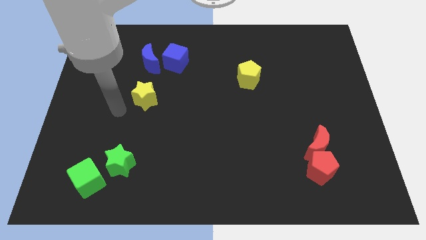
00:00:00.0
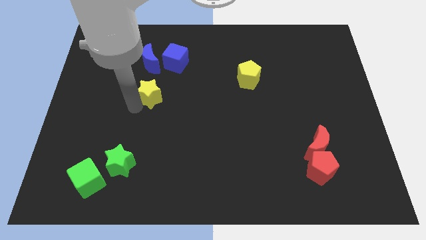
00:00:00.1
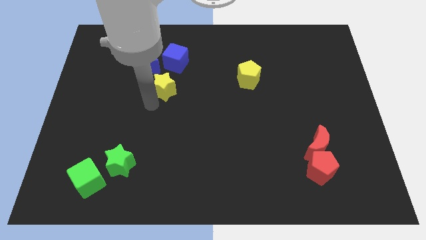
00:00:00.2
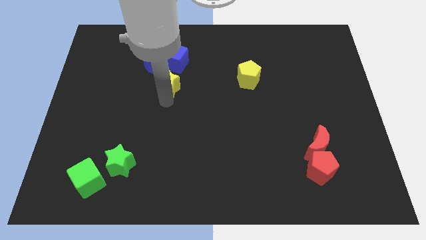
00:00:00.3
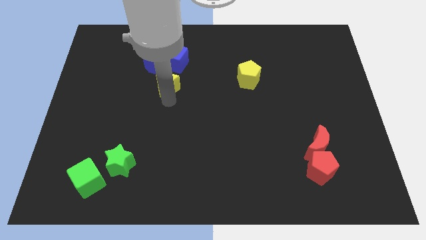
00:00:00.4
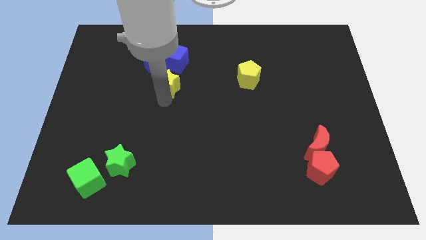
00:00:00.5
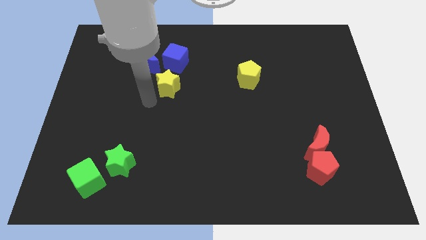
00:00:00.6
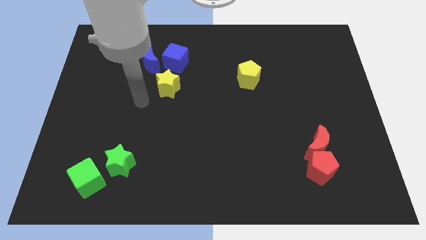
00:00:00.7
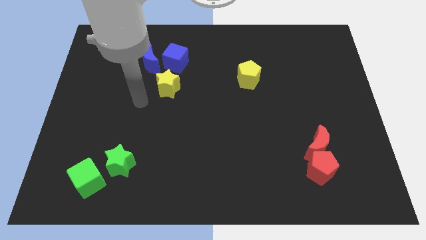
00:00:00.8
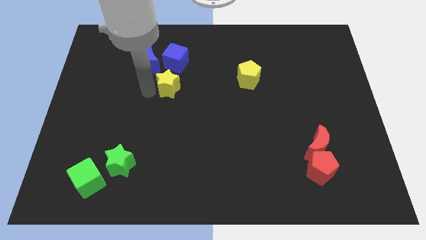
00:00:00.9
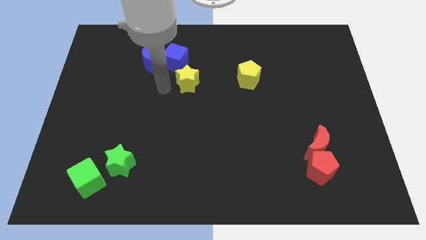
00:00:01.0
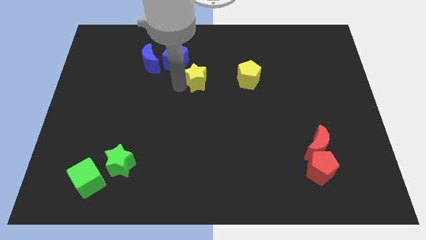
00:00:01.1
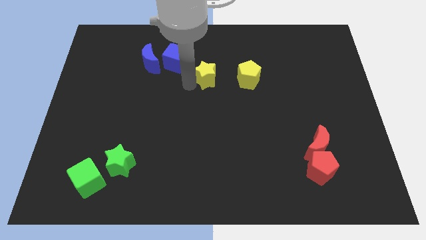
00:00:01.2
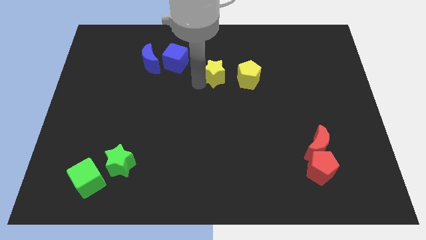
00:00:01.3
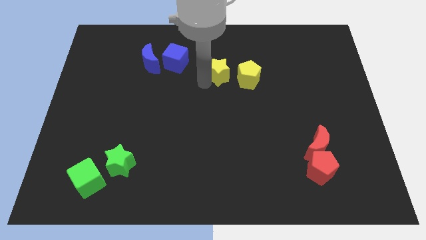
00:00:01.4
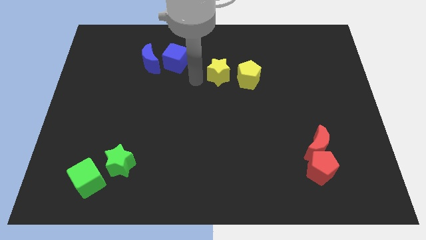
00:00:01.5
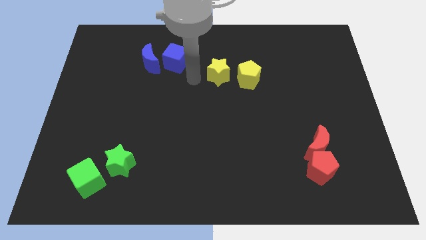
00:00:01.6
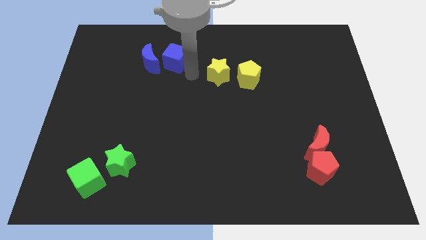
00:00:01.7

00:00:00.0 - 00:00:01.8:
move the yellow star to the left of the yellow pentagon

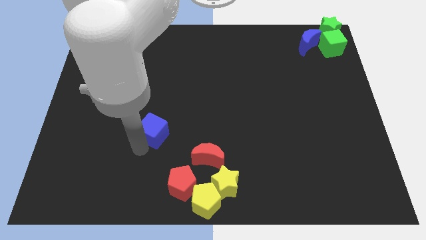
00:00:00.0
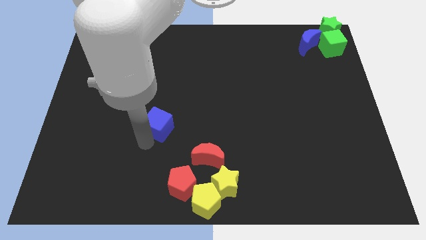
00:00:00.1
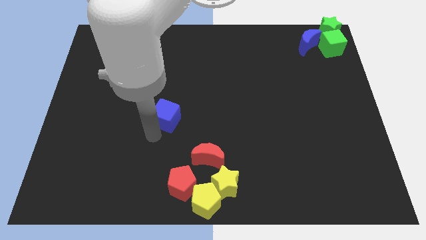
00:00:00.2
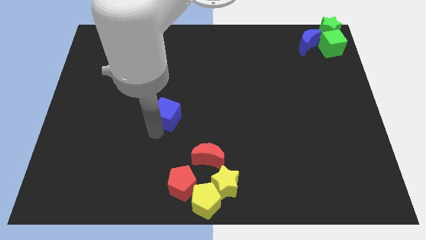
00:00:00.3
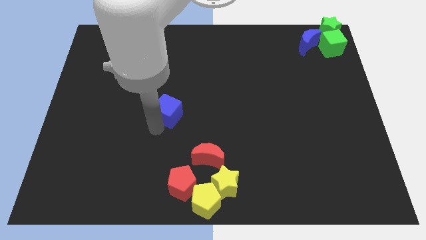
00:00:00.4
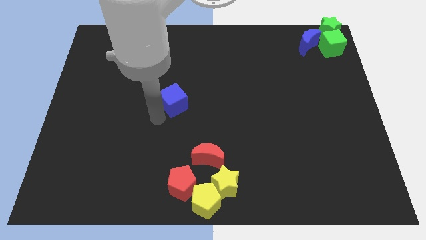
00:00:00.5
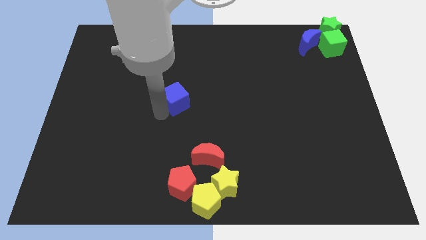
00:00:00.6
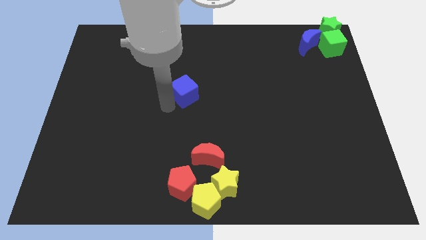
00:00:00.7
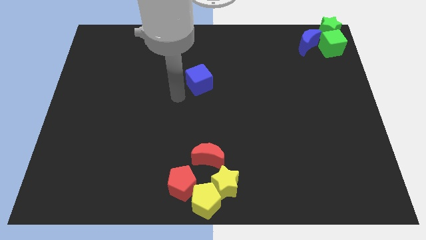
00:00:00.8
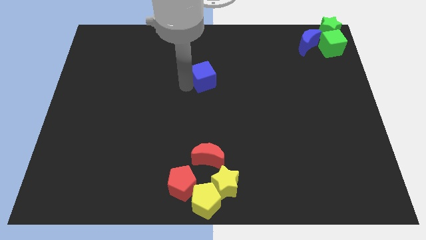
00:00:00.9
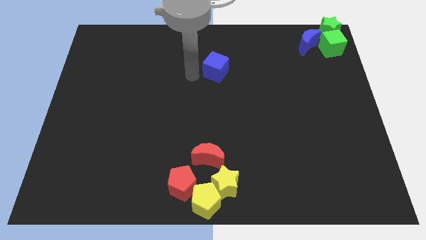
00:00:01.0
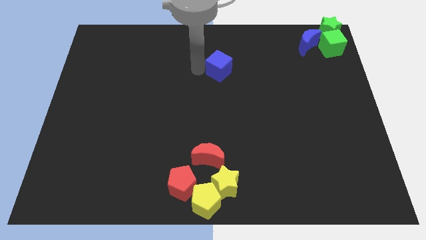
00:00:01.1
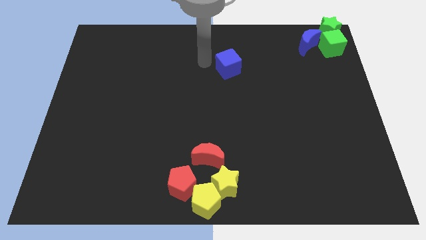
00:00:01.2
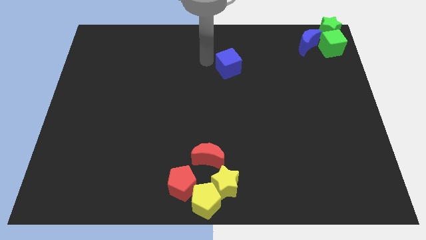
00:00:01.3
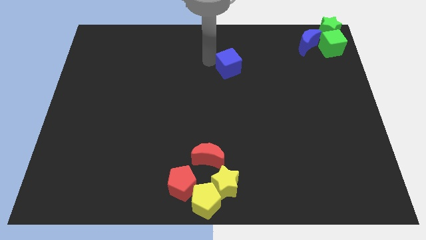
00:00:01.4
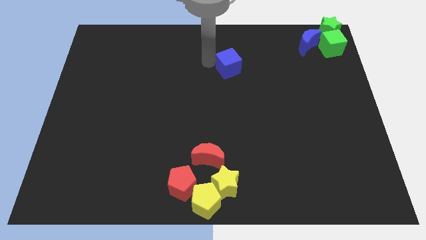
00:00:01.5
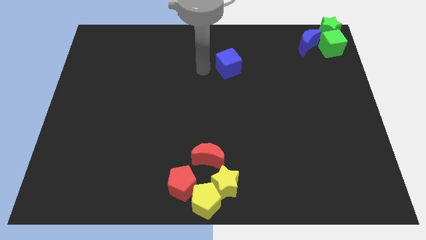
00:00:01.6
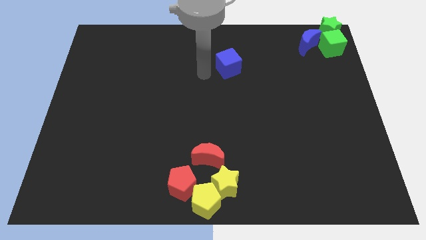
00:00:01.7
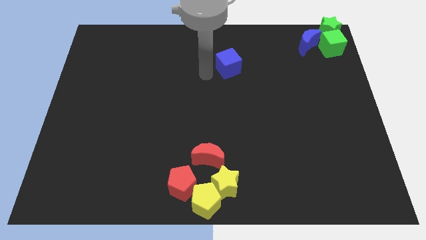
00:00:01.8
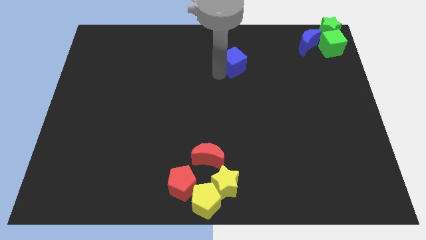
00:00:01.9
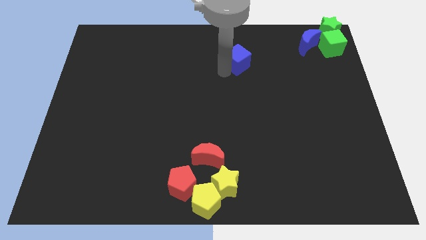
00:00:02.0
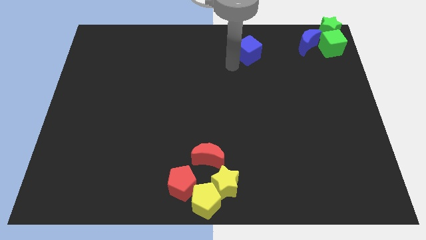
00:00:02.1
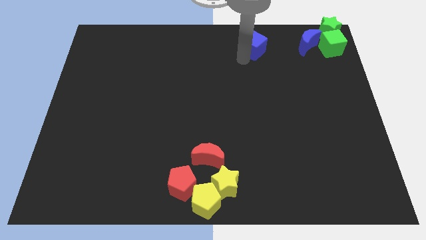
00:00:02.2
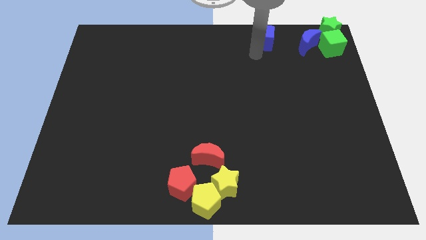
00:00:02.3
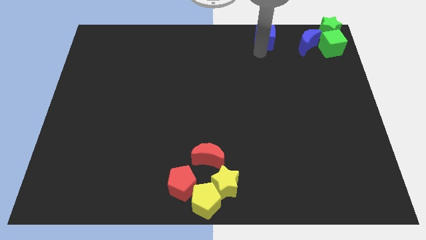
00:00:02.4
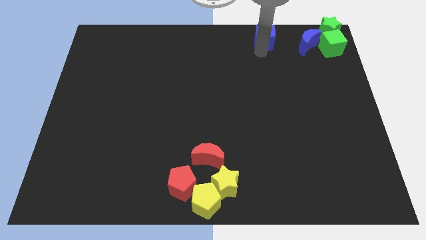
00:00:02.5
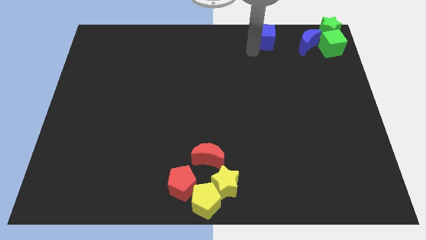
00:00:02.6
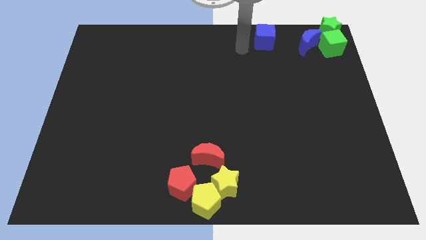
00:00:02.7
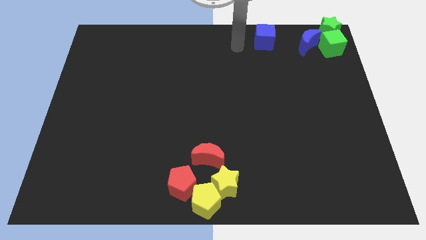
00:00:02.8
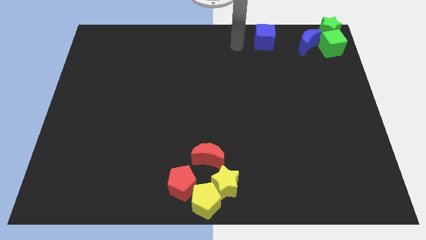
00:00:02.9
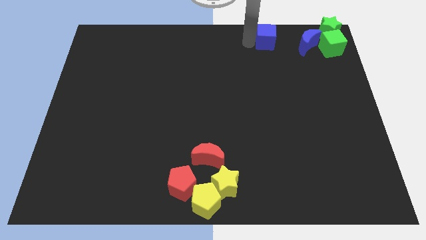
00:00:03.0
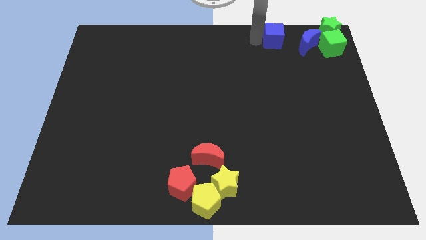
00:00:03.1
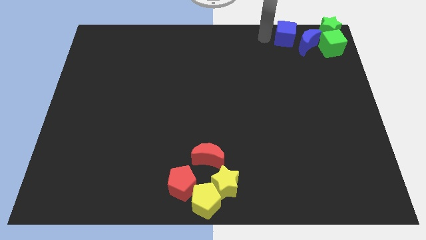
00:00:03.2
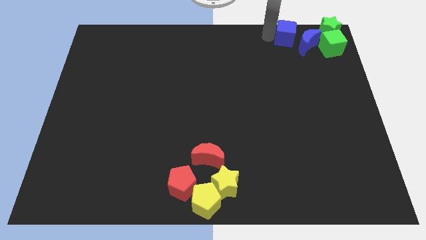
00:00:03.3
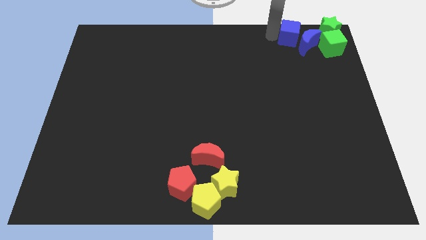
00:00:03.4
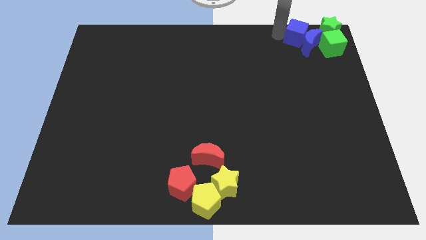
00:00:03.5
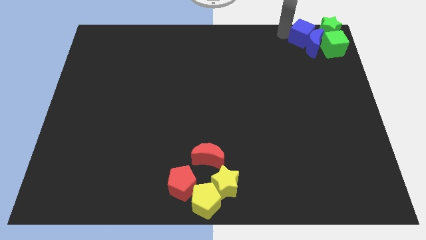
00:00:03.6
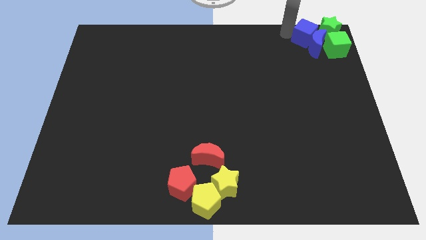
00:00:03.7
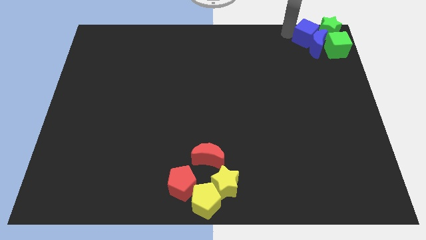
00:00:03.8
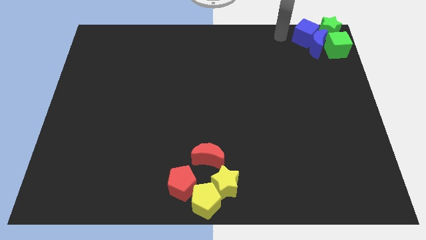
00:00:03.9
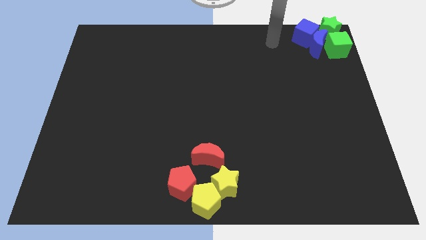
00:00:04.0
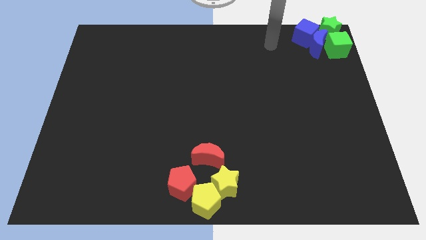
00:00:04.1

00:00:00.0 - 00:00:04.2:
push the blue cube into the blue moon

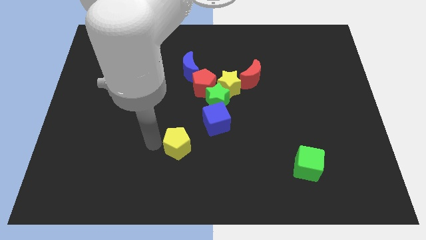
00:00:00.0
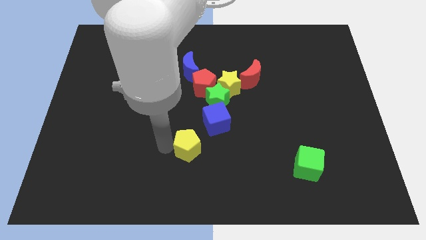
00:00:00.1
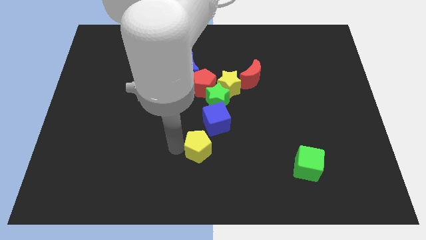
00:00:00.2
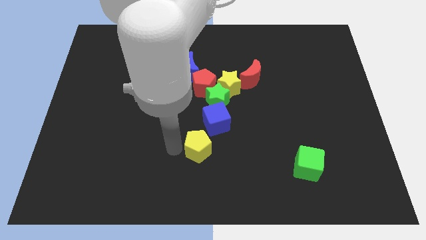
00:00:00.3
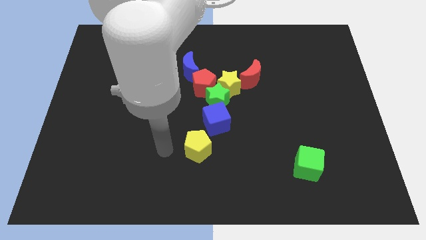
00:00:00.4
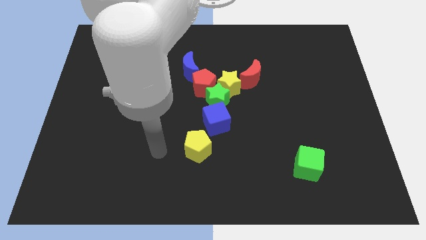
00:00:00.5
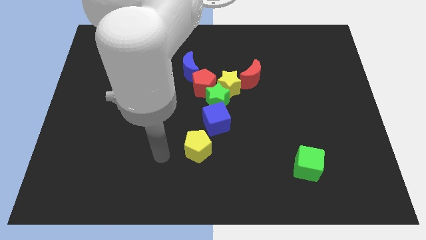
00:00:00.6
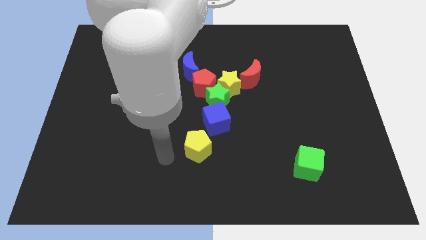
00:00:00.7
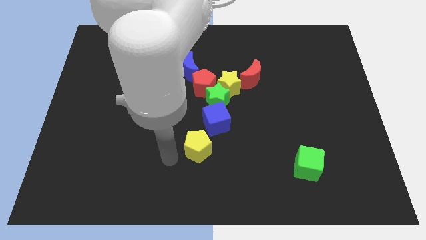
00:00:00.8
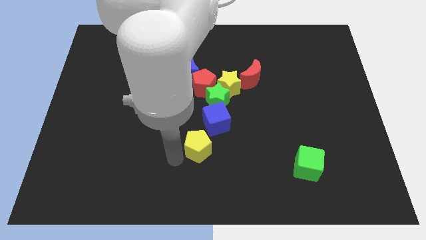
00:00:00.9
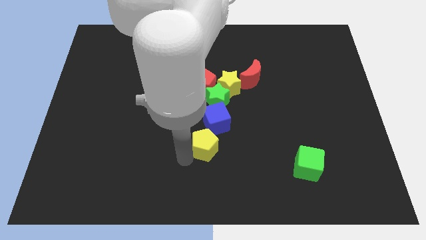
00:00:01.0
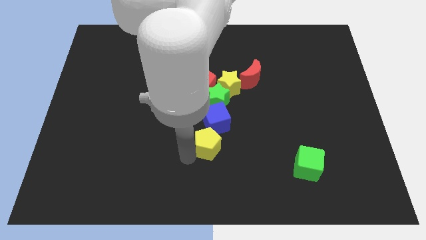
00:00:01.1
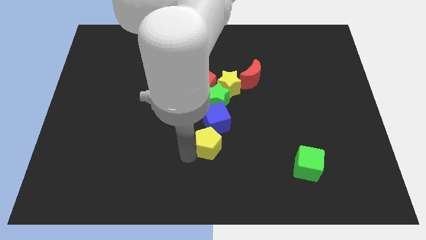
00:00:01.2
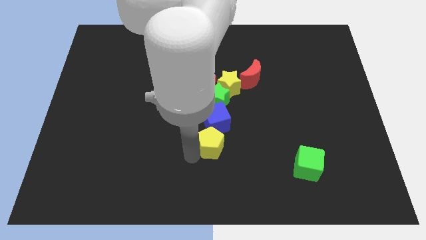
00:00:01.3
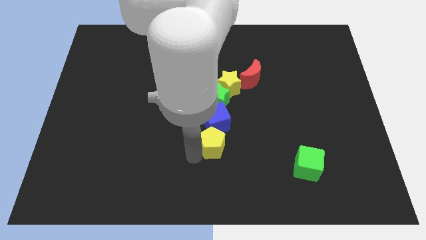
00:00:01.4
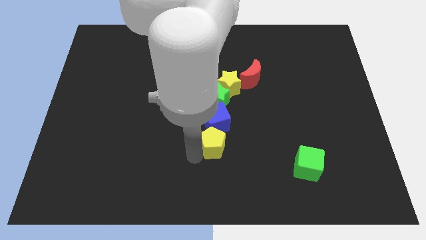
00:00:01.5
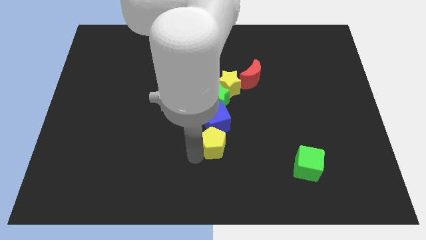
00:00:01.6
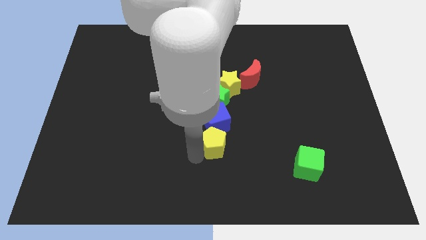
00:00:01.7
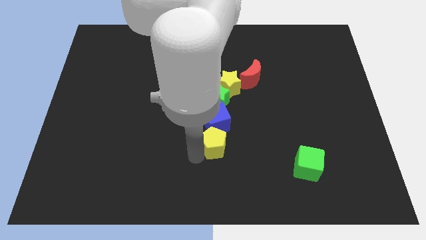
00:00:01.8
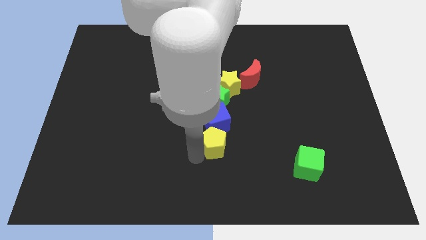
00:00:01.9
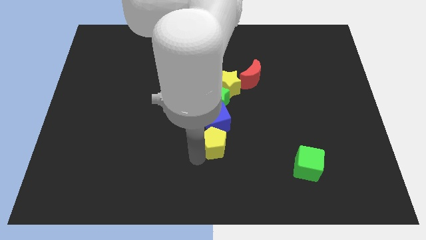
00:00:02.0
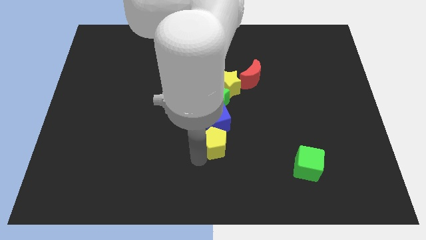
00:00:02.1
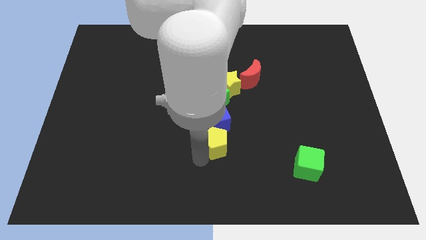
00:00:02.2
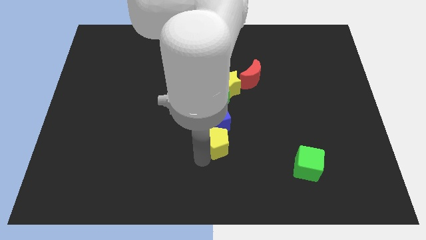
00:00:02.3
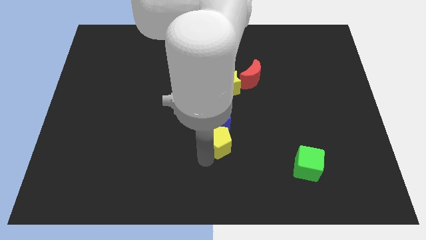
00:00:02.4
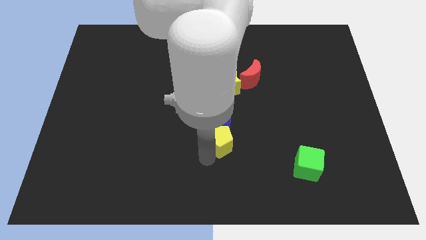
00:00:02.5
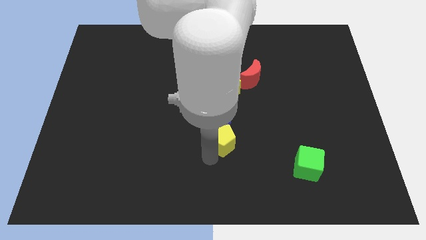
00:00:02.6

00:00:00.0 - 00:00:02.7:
push the yellow star to the bottom of the blue cube

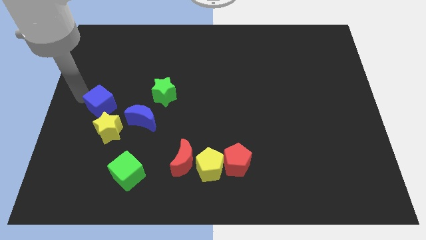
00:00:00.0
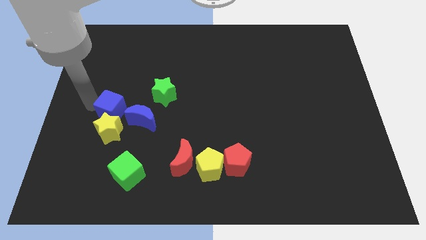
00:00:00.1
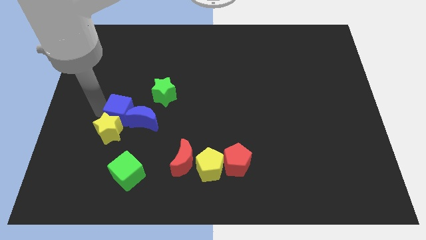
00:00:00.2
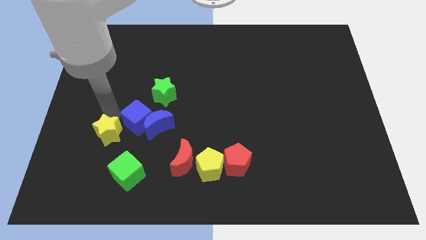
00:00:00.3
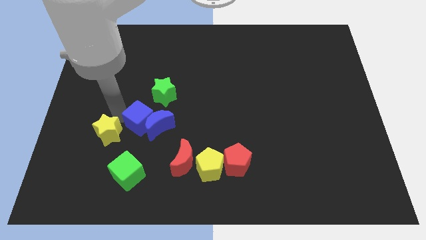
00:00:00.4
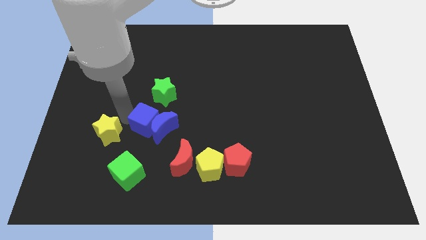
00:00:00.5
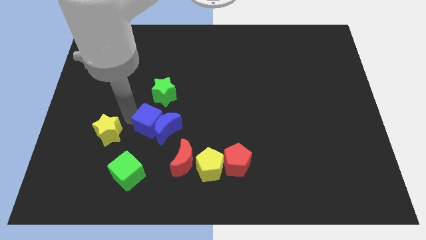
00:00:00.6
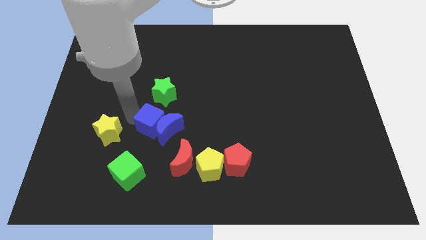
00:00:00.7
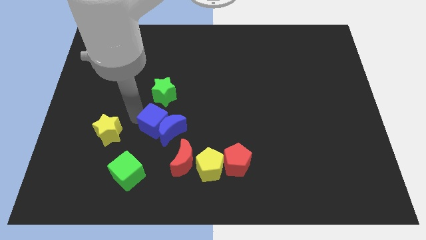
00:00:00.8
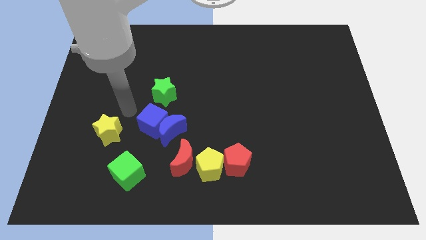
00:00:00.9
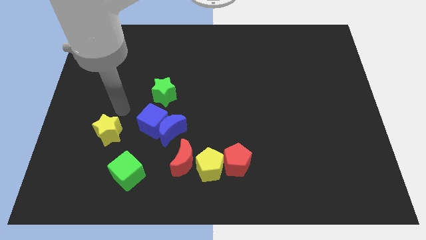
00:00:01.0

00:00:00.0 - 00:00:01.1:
push the blue cube below the green star
